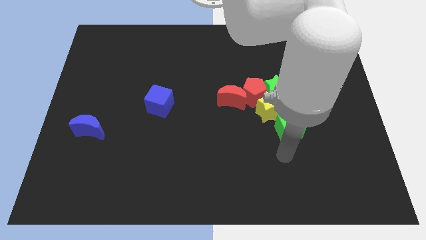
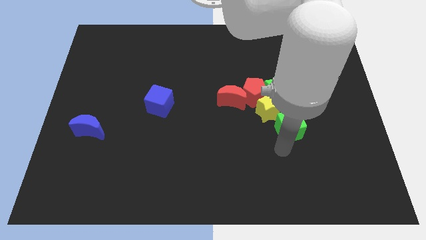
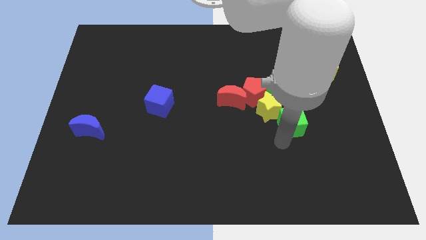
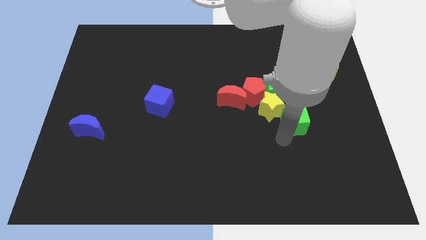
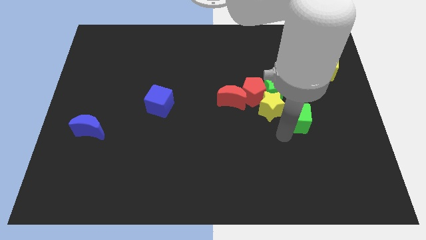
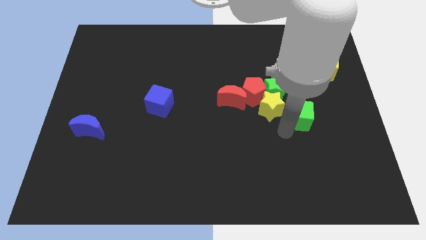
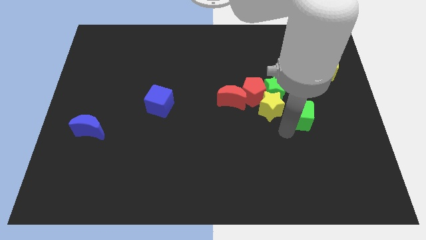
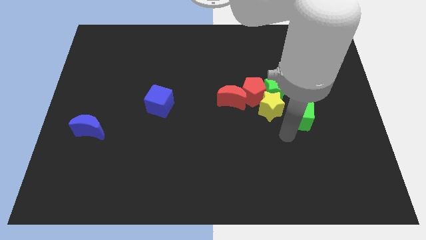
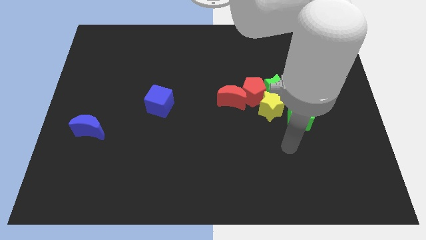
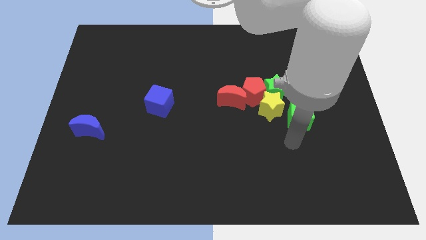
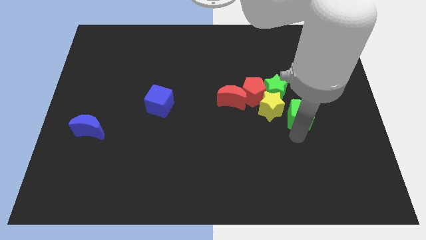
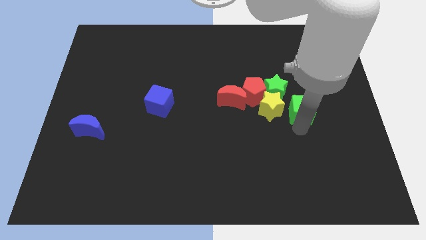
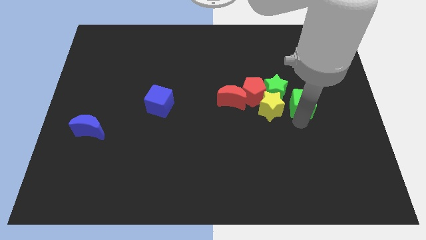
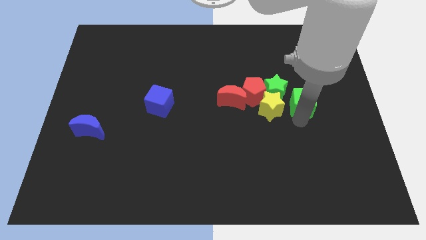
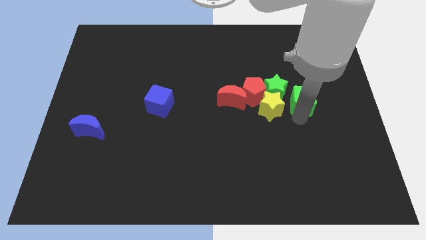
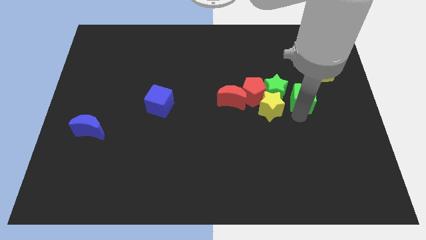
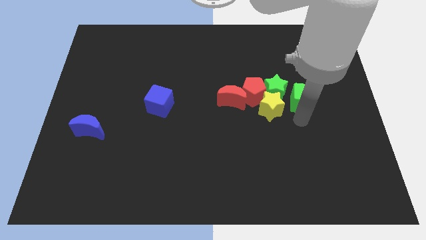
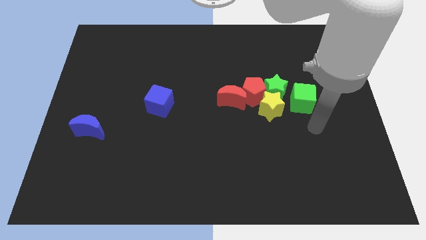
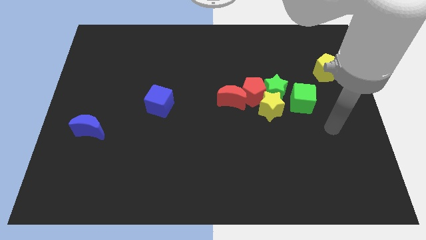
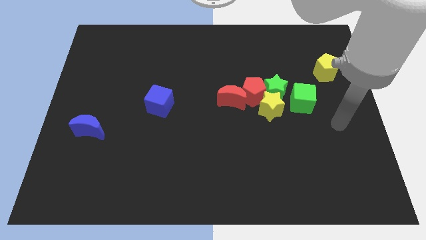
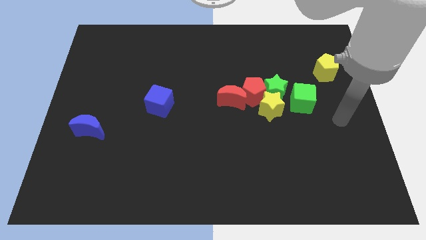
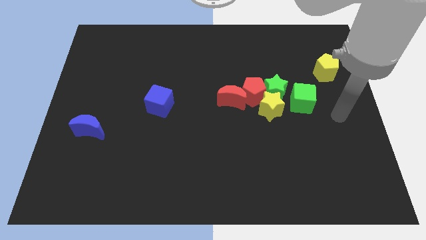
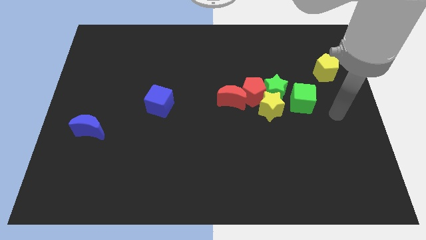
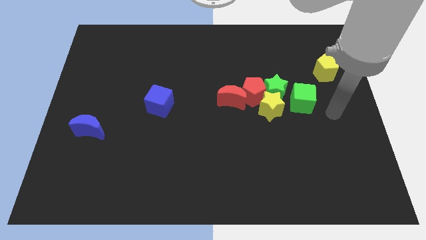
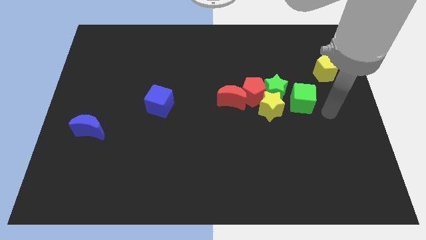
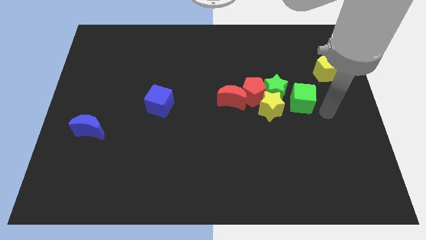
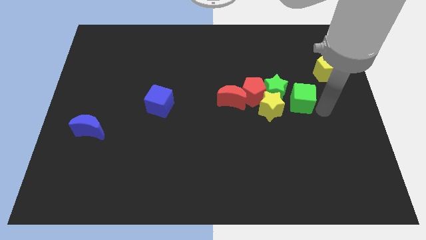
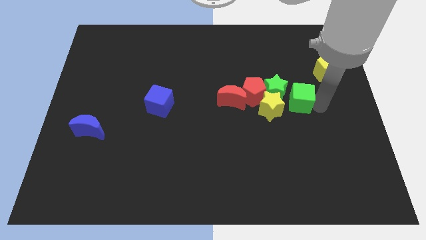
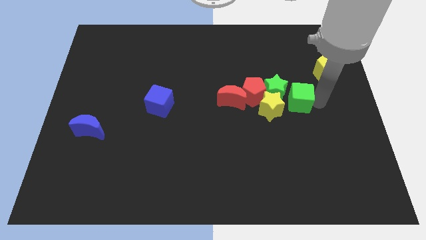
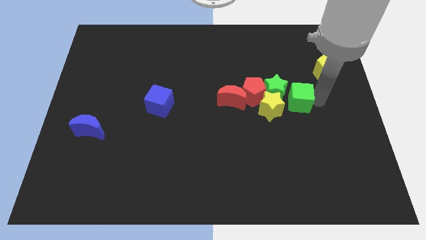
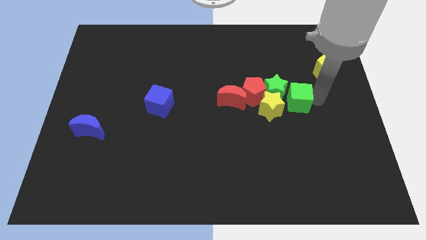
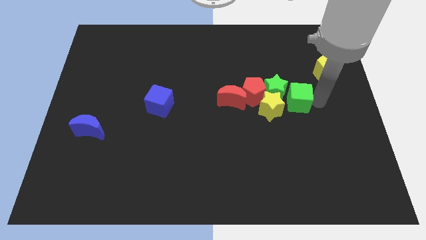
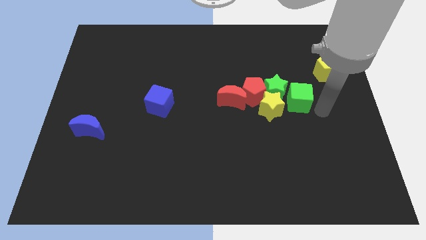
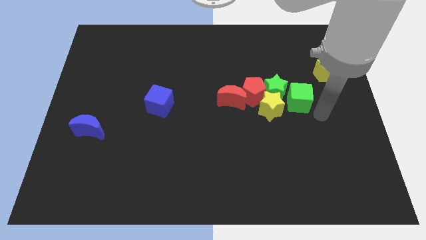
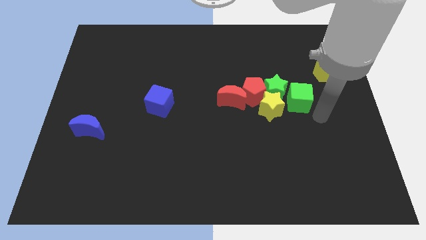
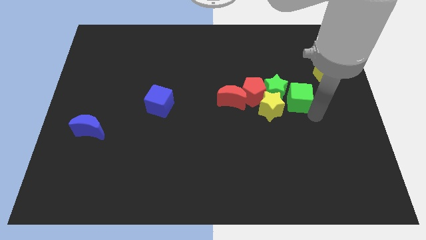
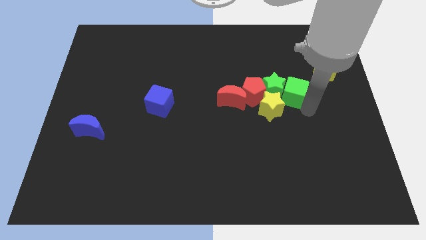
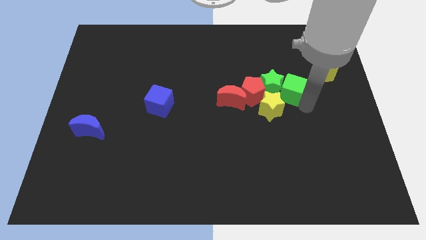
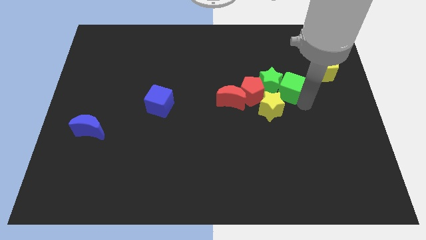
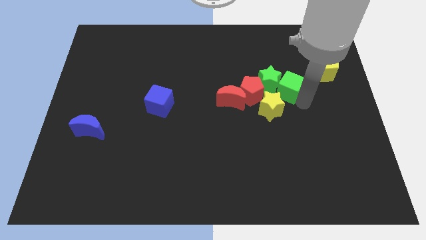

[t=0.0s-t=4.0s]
move the green cube right beside the green star

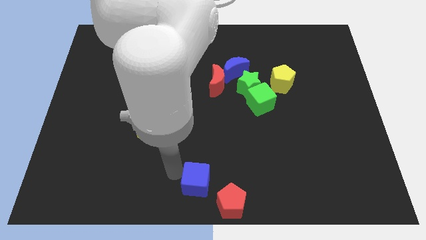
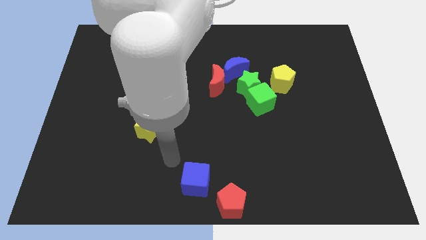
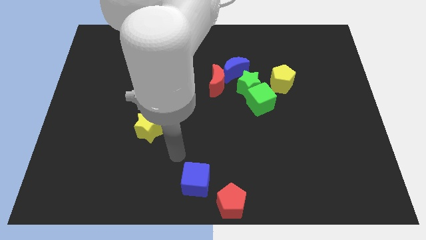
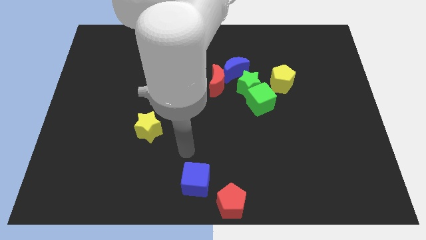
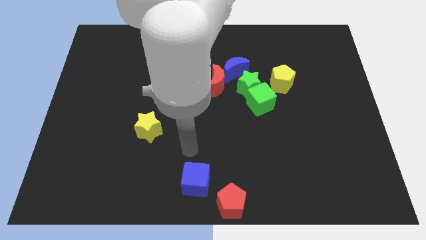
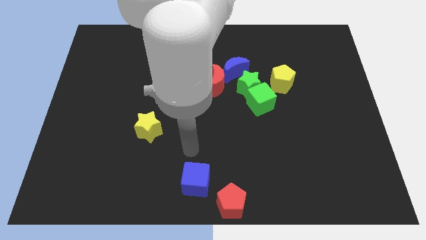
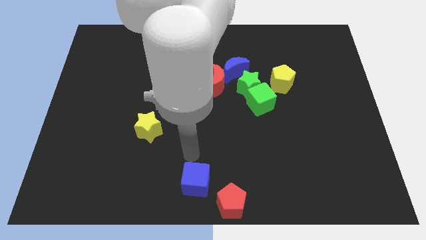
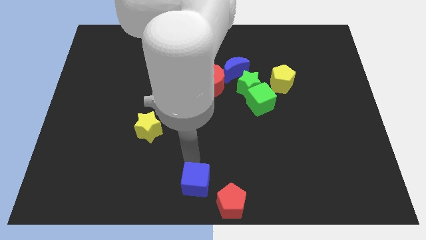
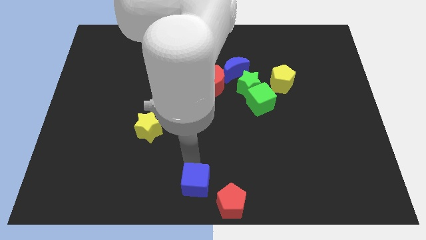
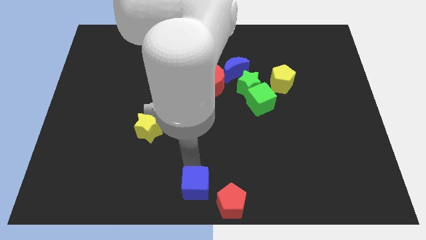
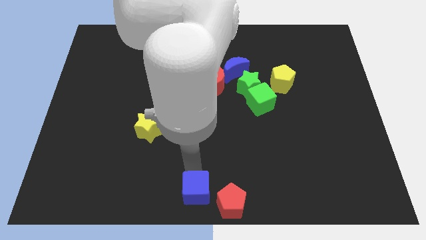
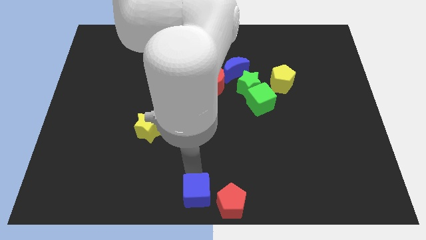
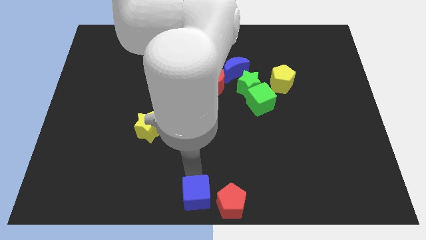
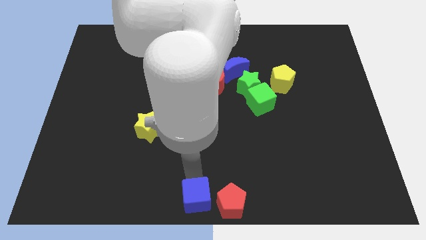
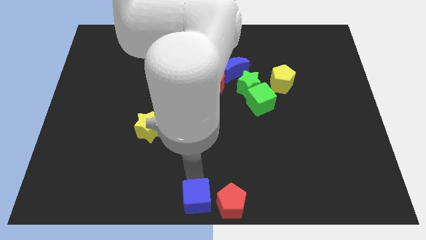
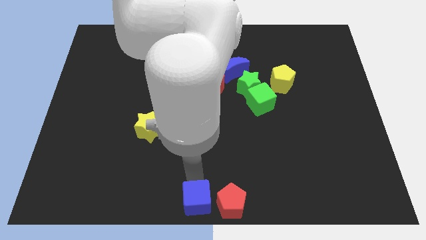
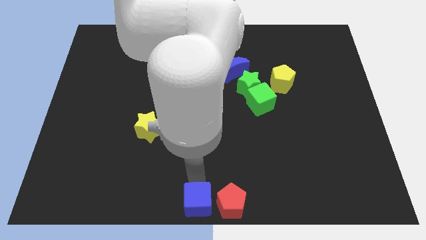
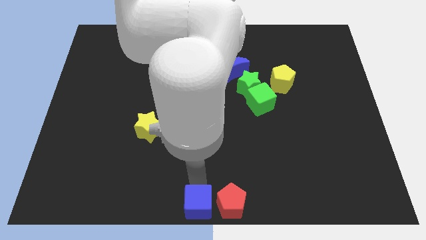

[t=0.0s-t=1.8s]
push the blue cube to the left of the red pentagon

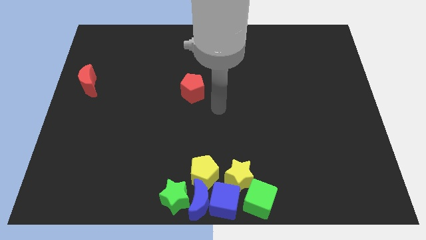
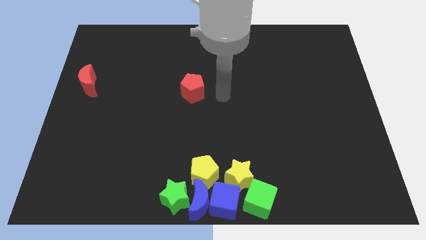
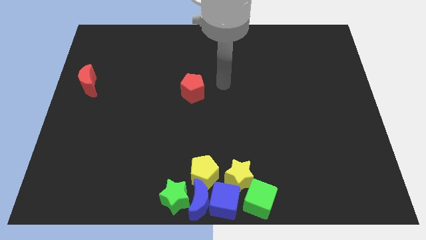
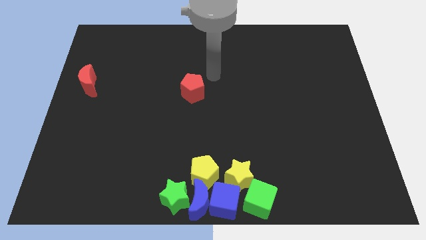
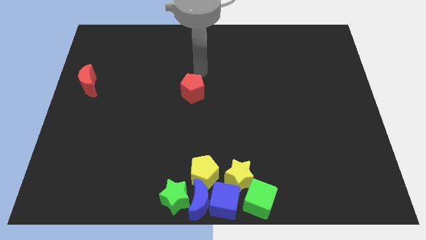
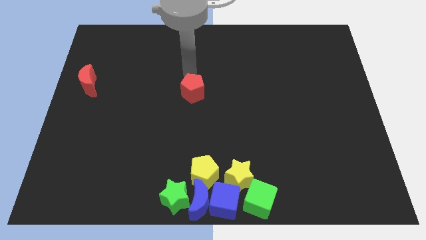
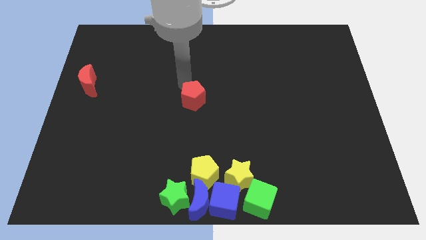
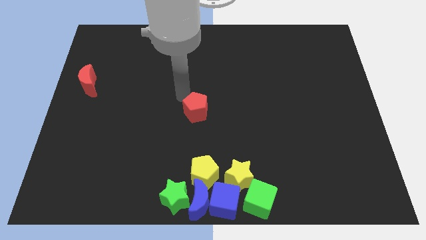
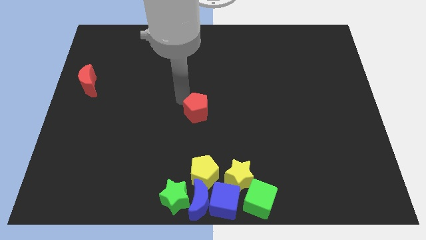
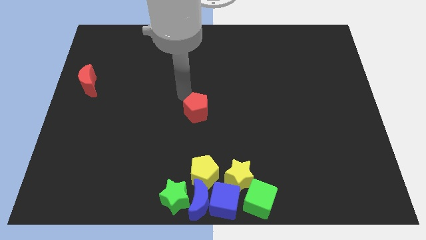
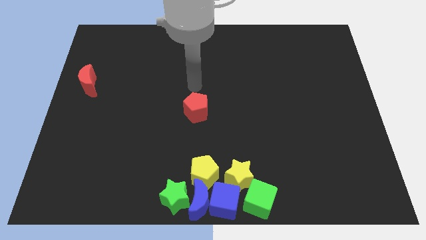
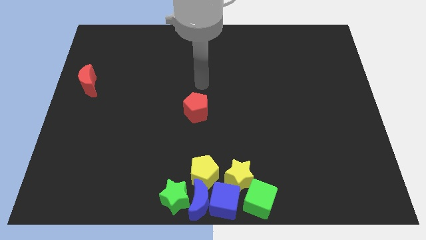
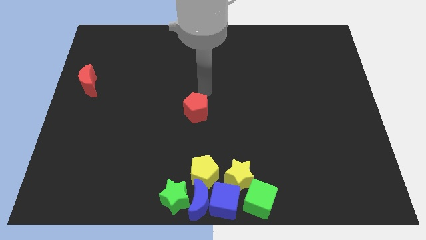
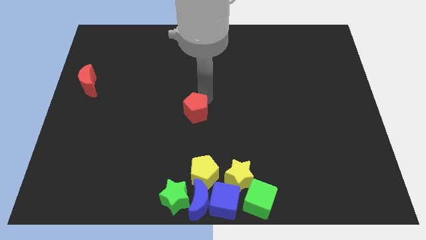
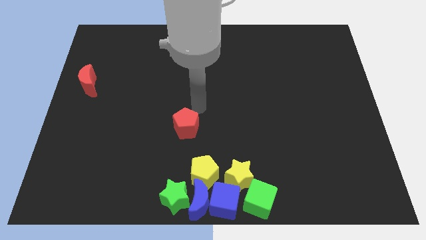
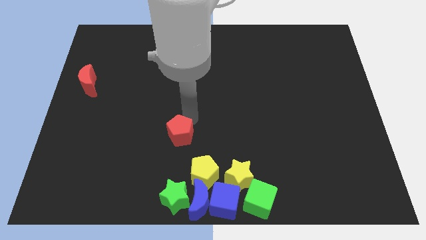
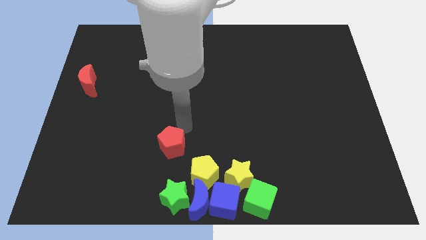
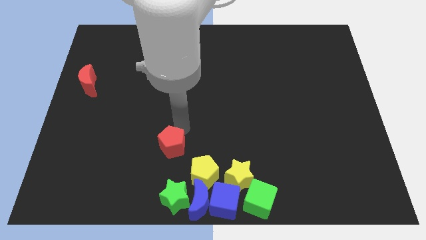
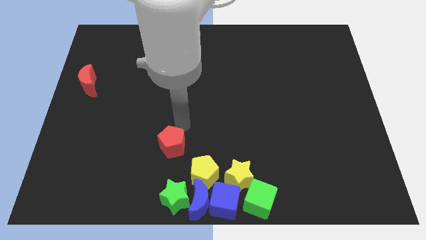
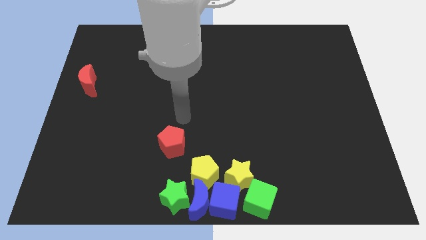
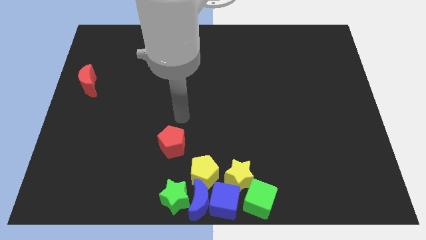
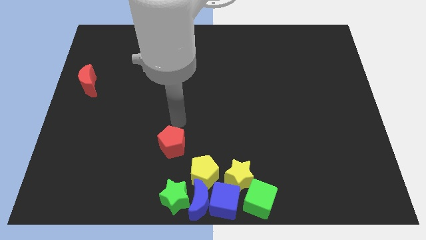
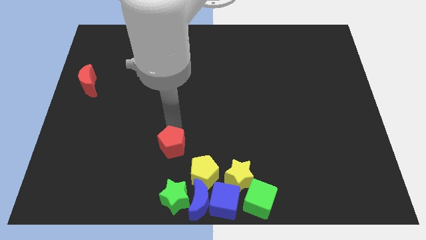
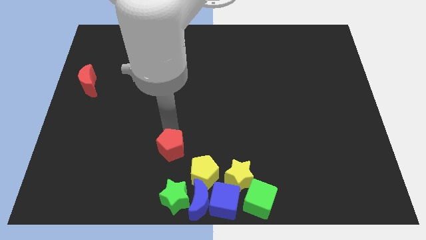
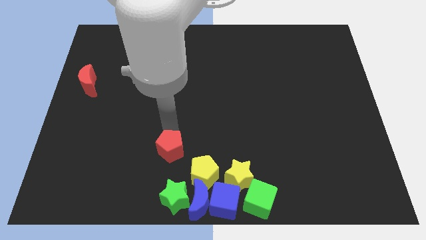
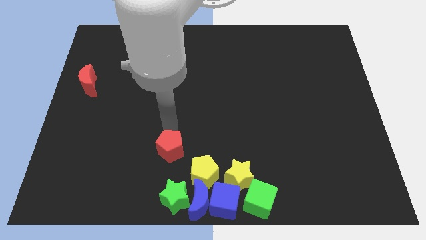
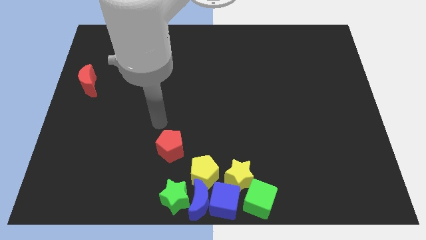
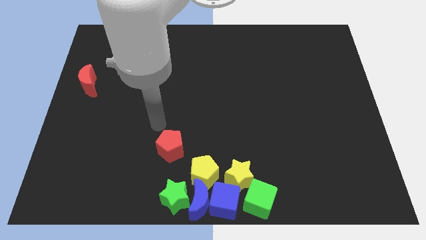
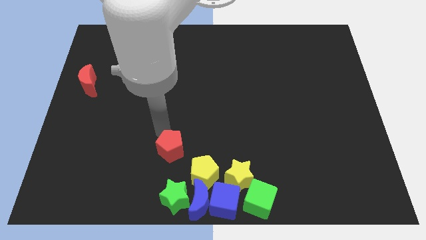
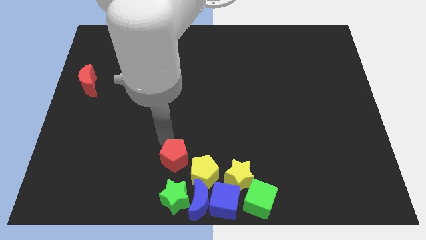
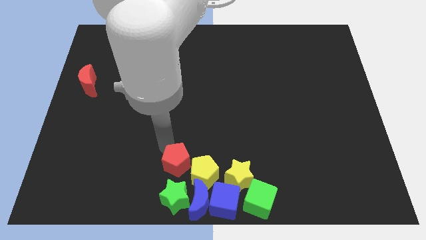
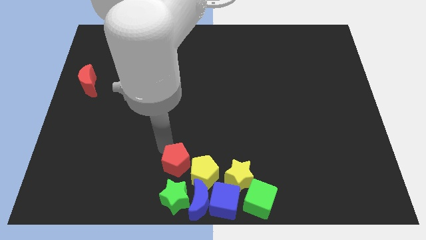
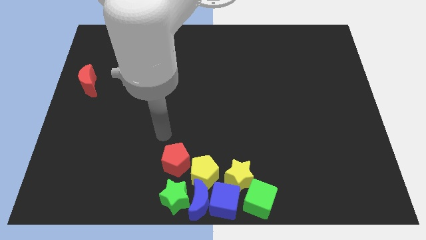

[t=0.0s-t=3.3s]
place the red pentagon above the green star
